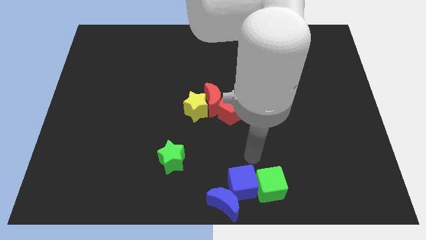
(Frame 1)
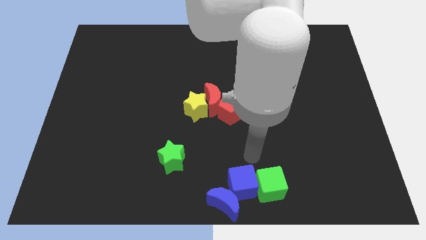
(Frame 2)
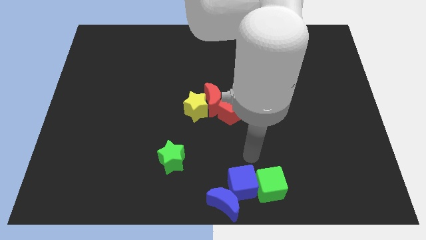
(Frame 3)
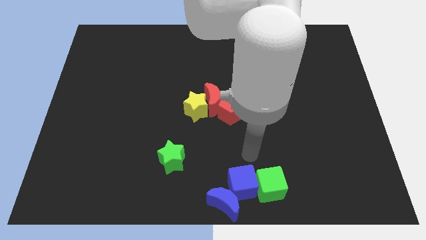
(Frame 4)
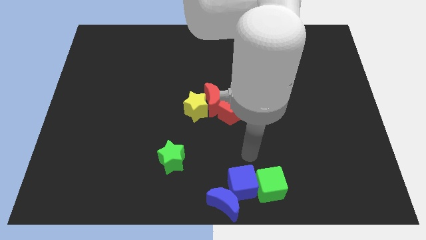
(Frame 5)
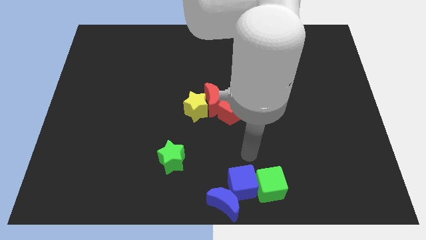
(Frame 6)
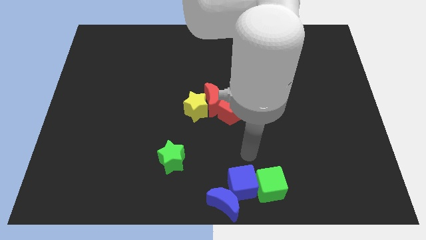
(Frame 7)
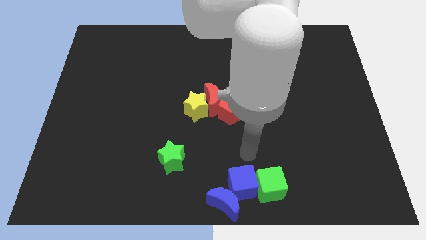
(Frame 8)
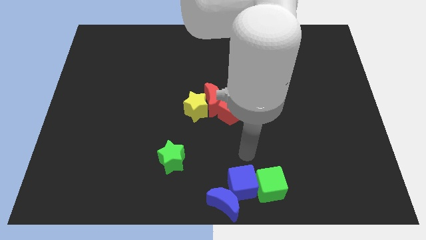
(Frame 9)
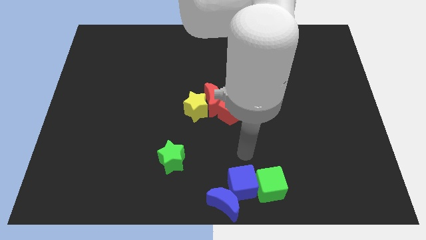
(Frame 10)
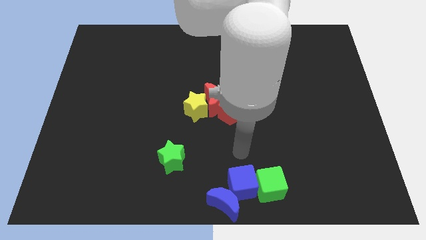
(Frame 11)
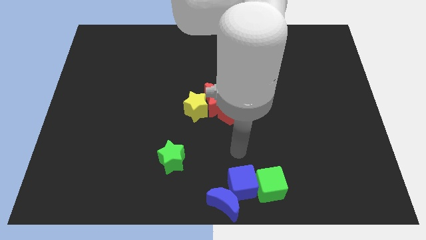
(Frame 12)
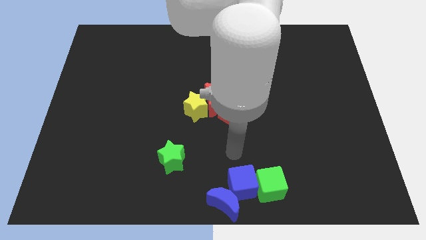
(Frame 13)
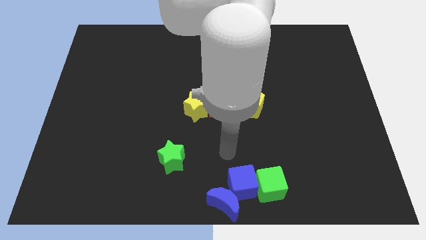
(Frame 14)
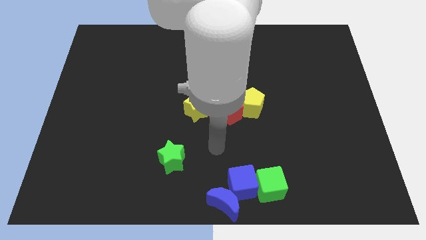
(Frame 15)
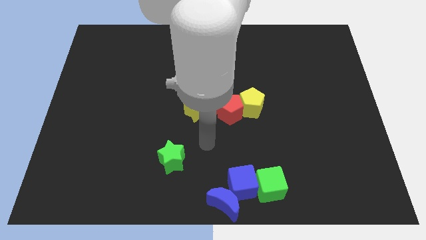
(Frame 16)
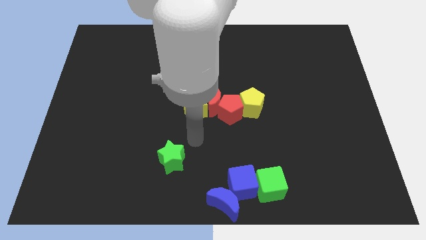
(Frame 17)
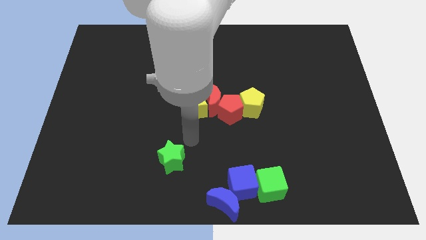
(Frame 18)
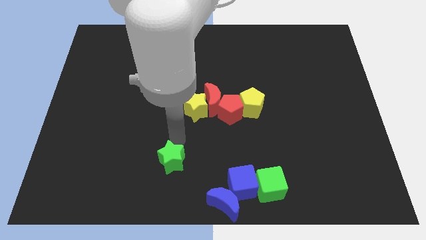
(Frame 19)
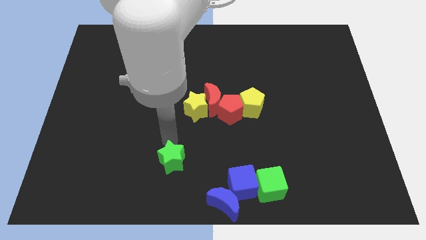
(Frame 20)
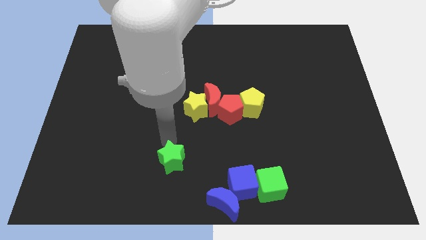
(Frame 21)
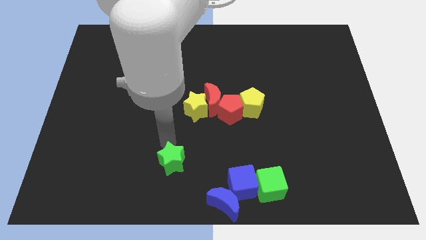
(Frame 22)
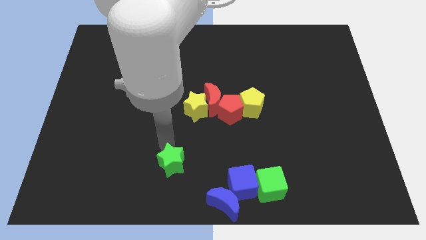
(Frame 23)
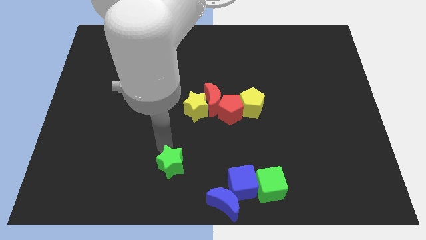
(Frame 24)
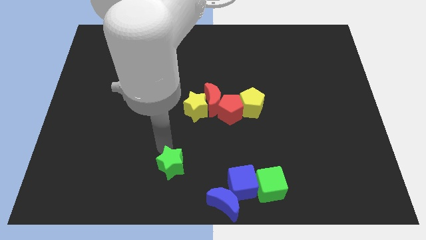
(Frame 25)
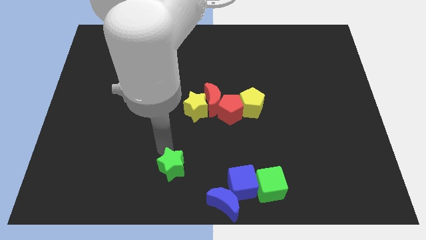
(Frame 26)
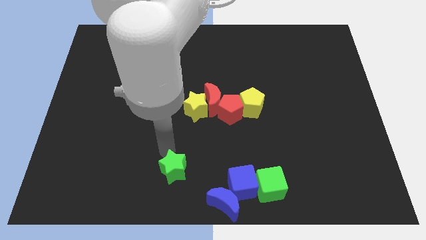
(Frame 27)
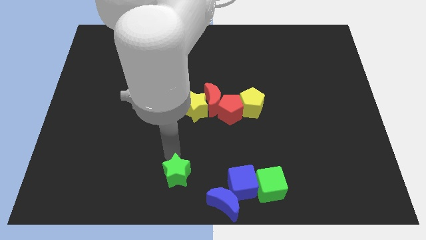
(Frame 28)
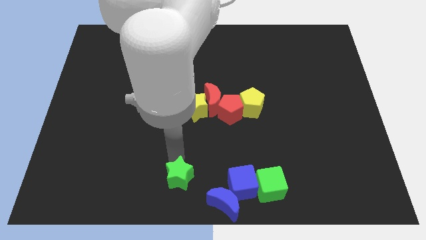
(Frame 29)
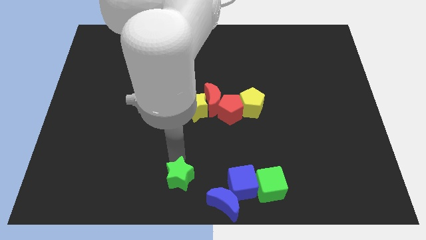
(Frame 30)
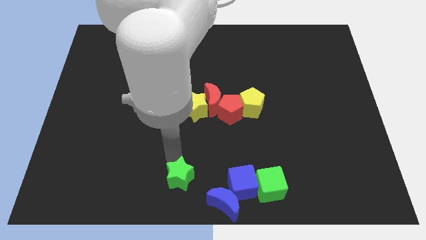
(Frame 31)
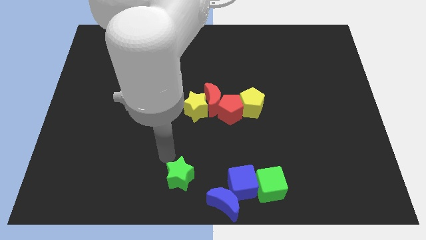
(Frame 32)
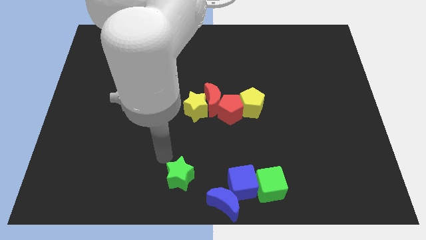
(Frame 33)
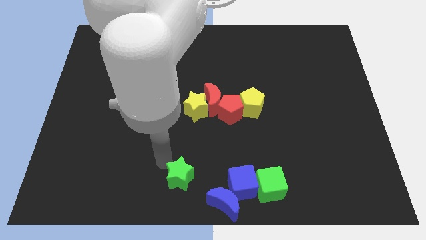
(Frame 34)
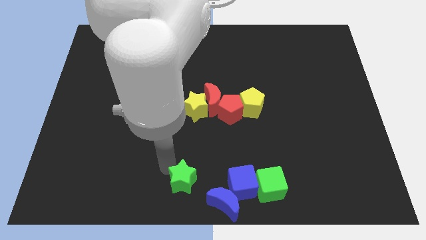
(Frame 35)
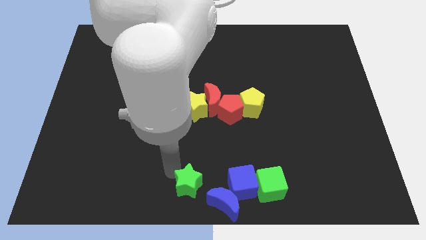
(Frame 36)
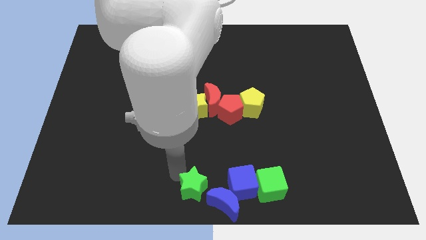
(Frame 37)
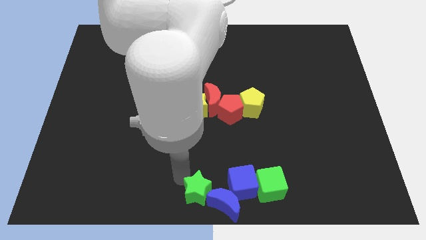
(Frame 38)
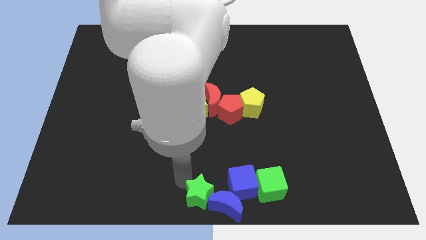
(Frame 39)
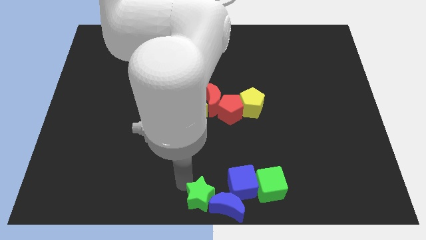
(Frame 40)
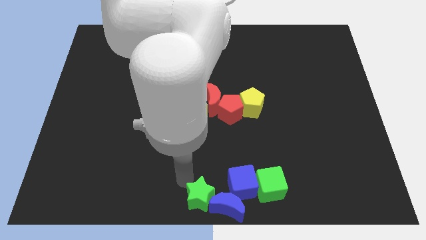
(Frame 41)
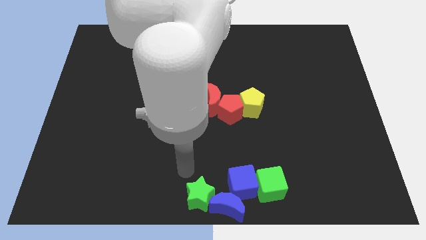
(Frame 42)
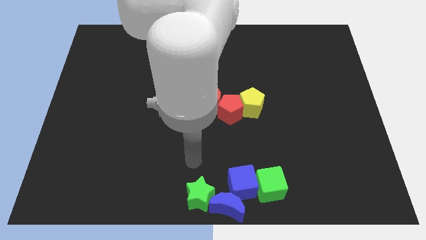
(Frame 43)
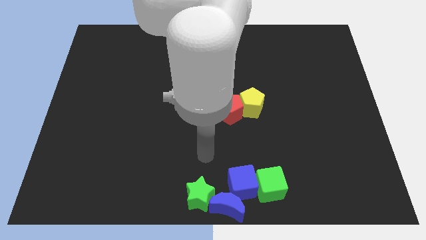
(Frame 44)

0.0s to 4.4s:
push green star too the left of blue moon

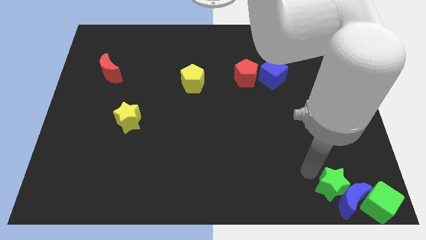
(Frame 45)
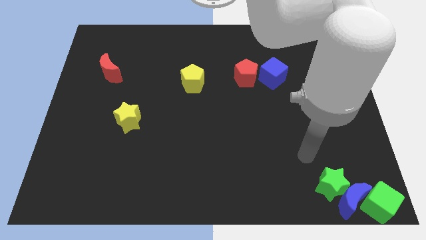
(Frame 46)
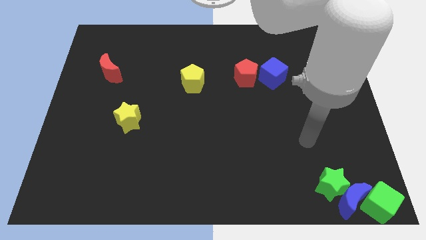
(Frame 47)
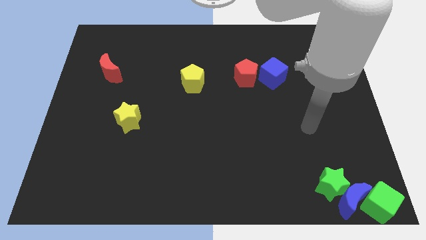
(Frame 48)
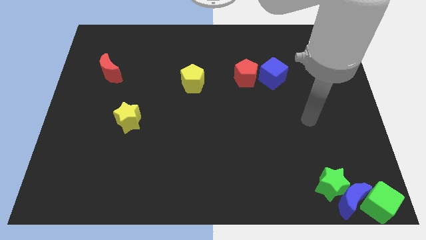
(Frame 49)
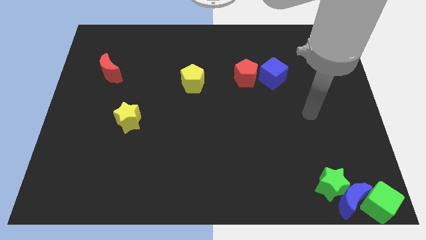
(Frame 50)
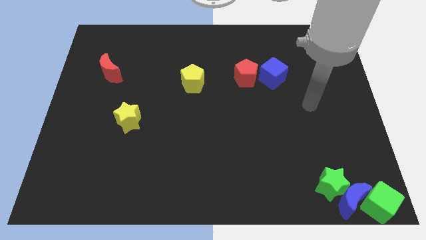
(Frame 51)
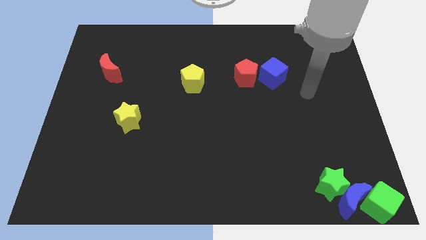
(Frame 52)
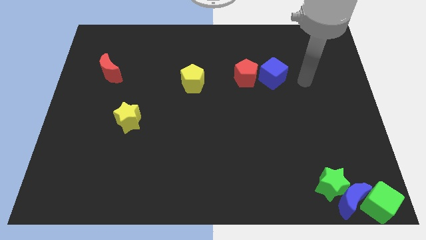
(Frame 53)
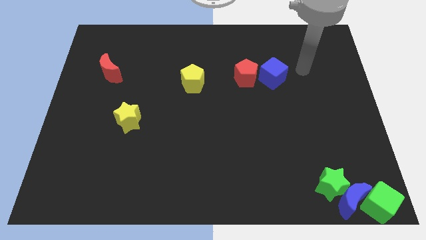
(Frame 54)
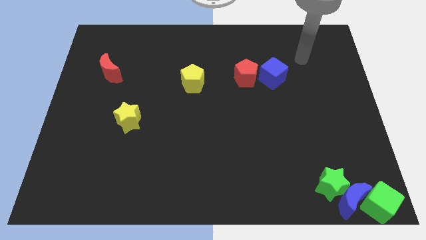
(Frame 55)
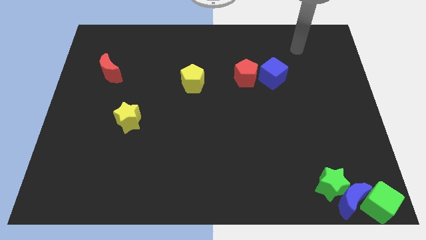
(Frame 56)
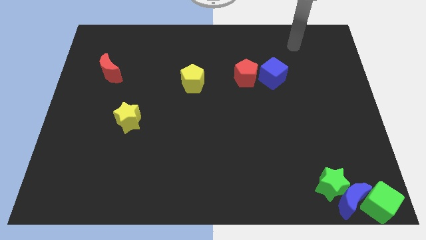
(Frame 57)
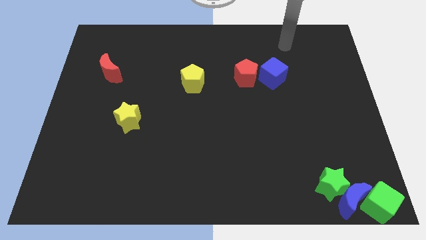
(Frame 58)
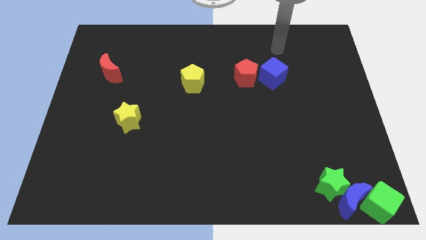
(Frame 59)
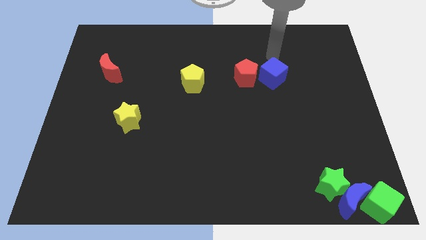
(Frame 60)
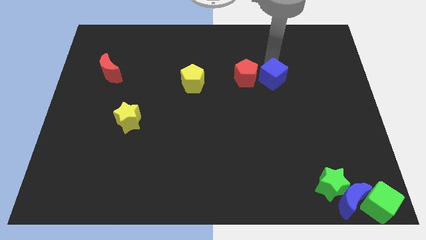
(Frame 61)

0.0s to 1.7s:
move your arm to the top of blue cube

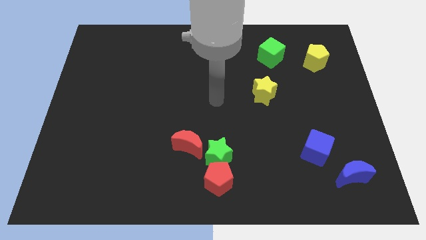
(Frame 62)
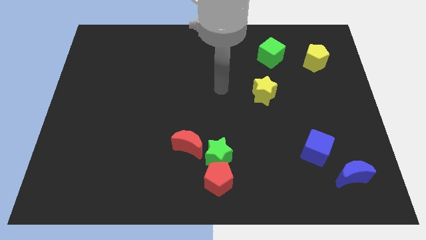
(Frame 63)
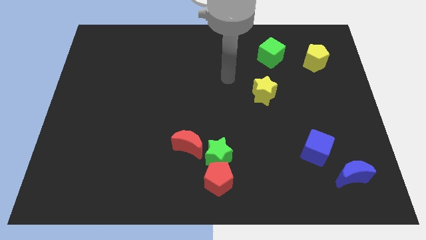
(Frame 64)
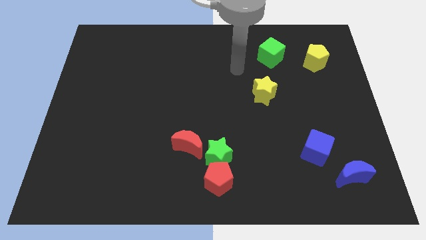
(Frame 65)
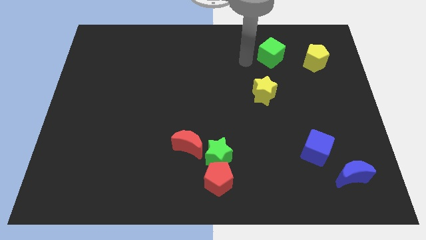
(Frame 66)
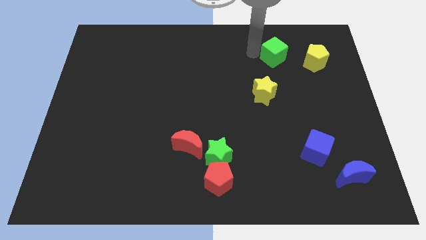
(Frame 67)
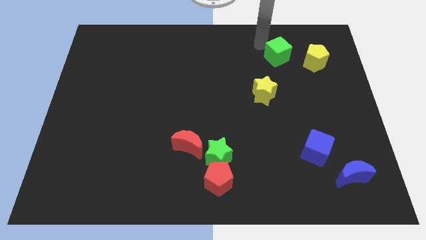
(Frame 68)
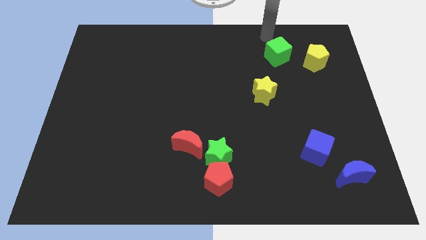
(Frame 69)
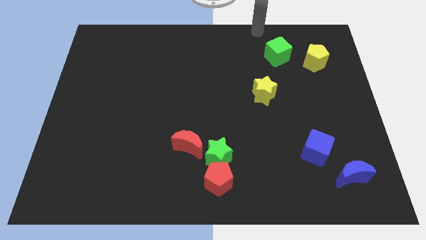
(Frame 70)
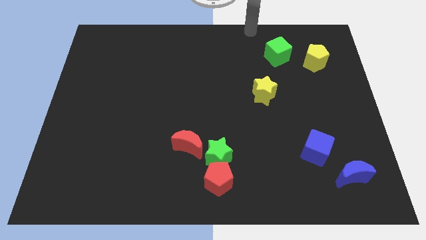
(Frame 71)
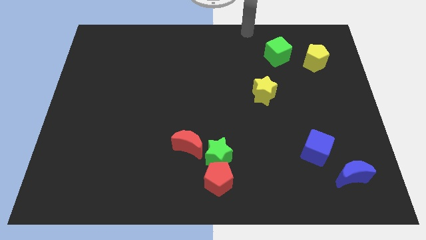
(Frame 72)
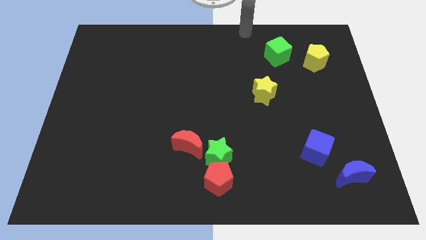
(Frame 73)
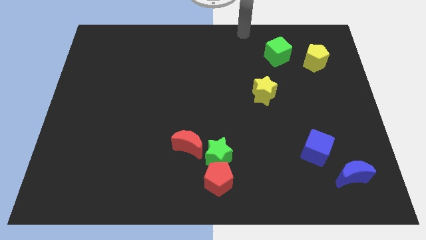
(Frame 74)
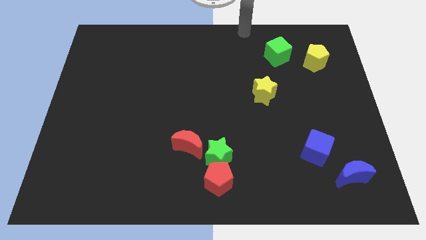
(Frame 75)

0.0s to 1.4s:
move the green cube slightly to the right

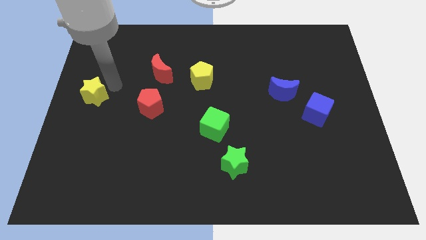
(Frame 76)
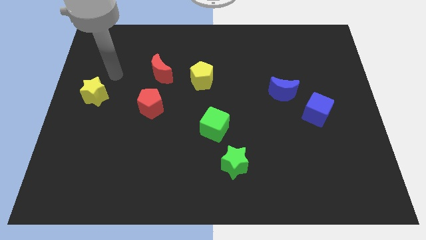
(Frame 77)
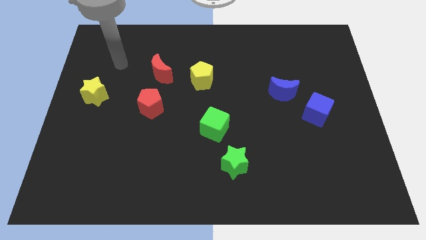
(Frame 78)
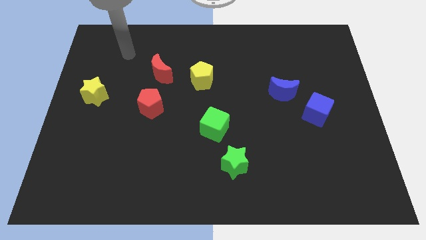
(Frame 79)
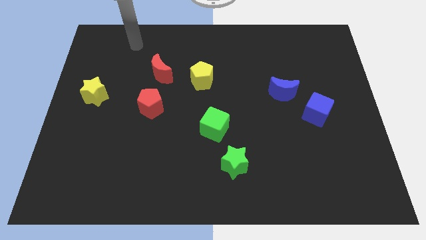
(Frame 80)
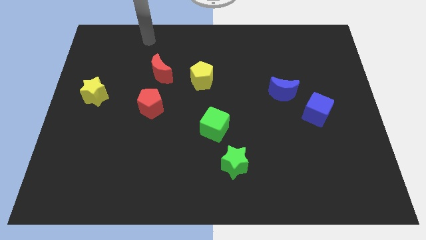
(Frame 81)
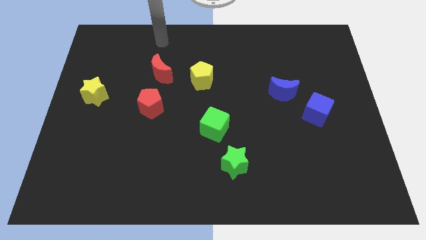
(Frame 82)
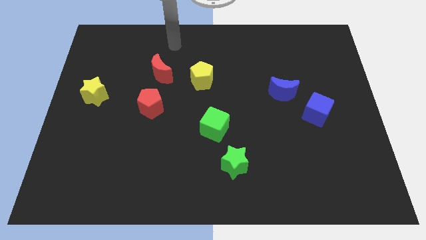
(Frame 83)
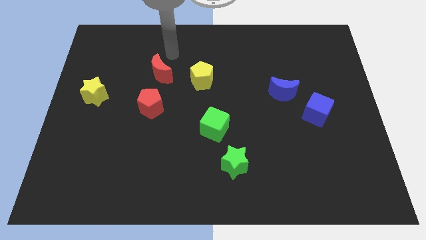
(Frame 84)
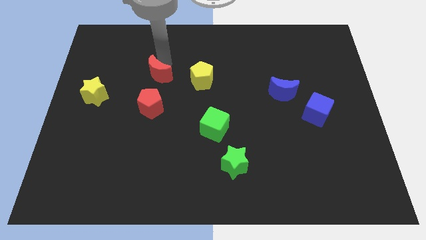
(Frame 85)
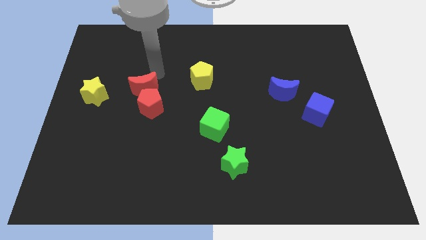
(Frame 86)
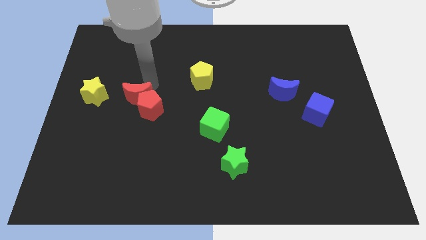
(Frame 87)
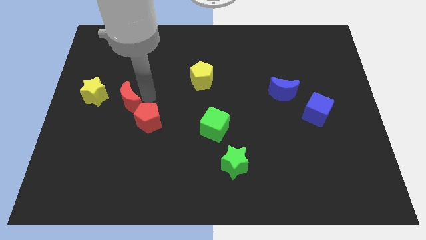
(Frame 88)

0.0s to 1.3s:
drag the red moon into the top left side of the red pentagon

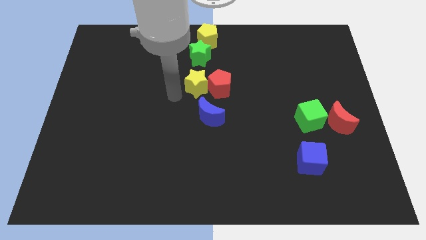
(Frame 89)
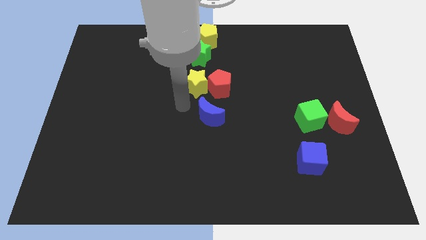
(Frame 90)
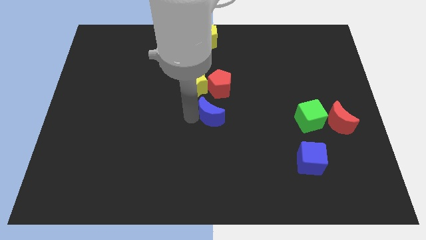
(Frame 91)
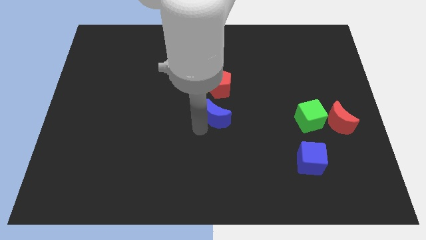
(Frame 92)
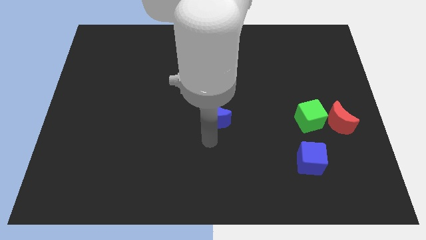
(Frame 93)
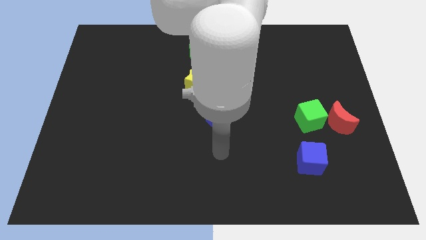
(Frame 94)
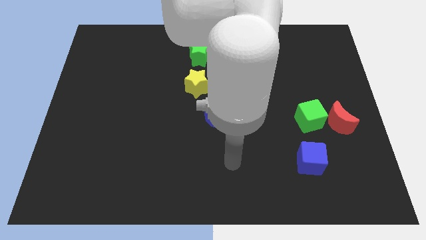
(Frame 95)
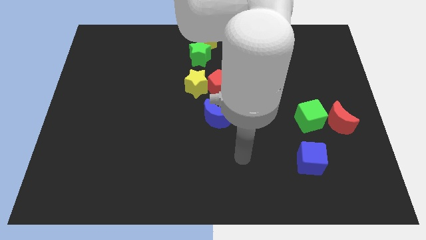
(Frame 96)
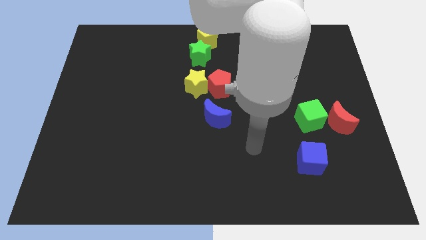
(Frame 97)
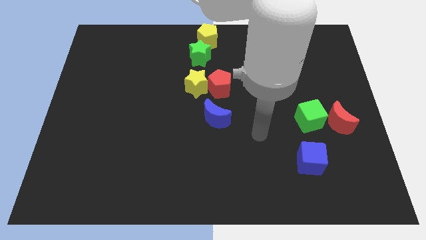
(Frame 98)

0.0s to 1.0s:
touch the blue moon
